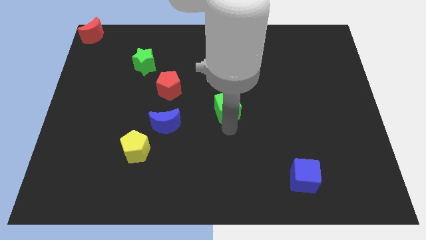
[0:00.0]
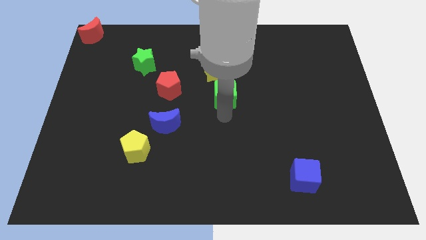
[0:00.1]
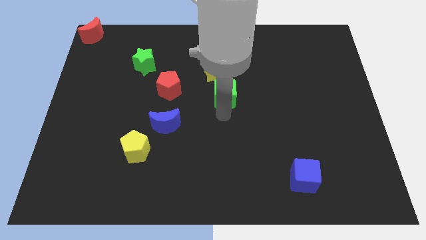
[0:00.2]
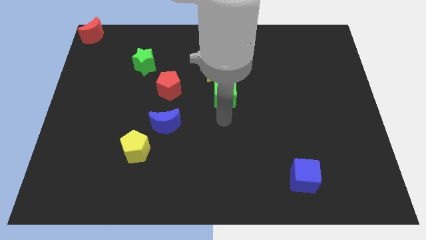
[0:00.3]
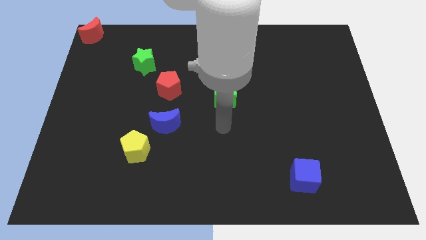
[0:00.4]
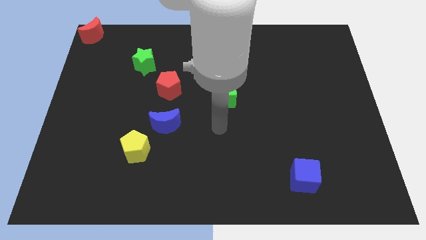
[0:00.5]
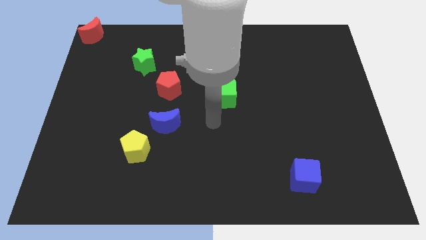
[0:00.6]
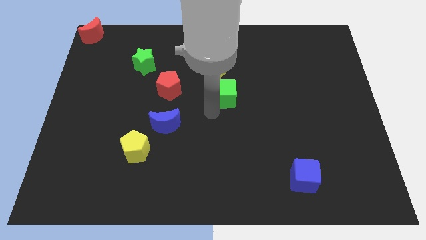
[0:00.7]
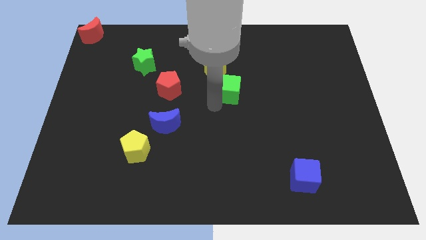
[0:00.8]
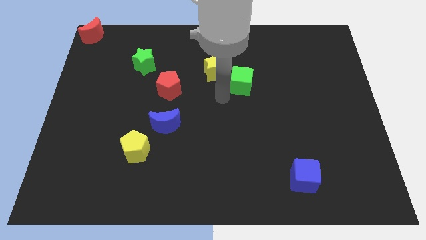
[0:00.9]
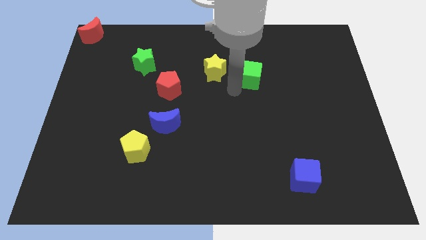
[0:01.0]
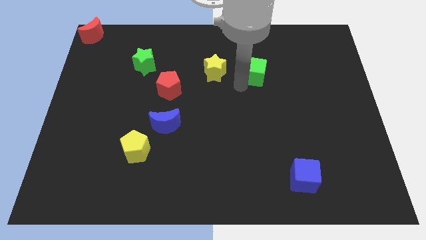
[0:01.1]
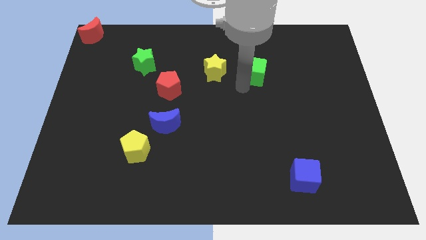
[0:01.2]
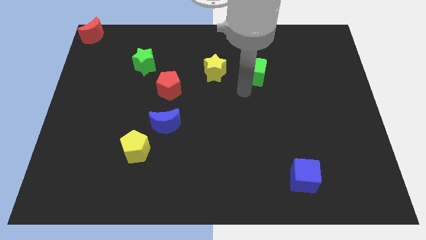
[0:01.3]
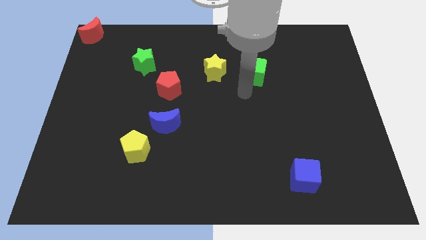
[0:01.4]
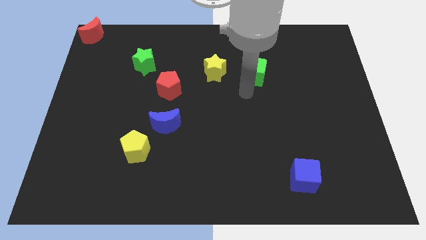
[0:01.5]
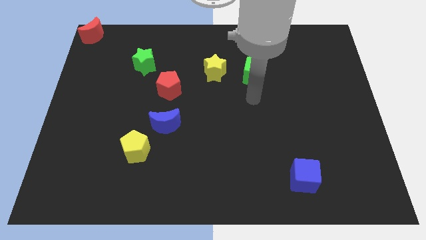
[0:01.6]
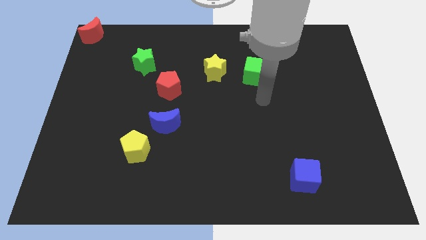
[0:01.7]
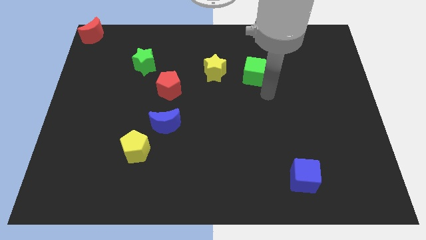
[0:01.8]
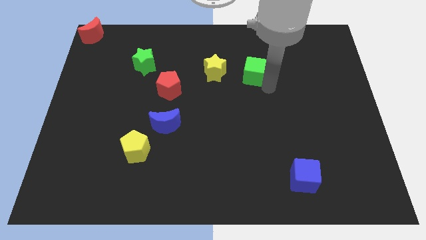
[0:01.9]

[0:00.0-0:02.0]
place the green cube to the right of the yellow star

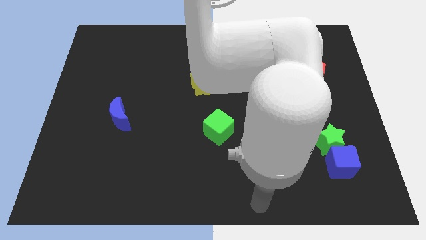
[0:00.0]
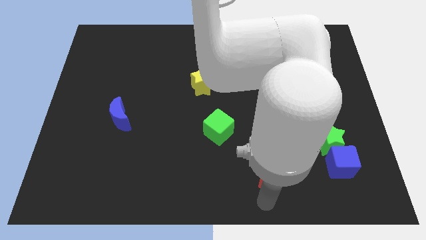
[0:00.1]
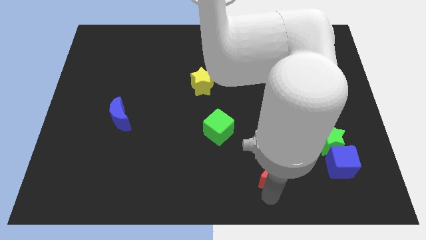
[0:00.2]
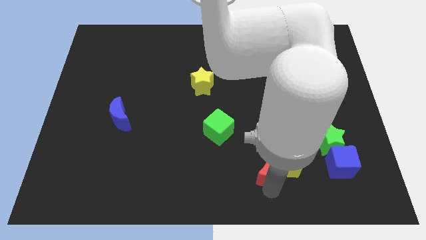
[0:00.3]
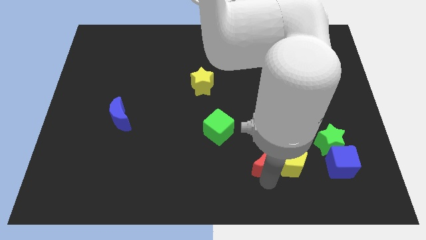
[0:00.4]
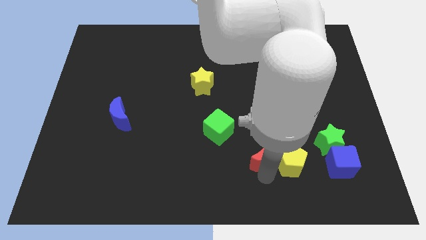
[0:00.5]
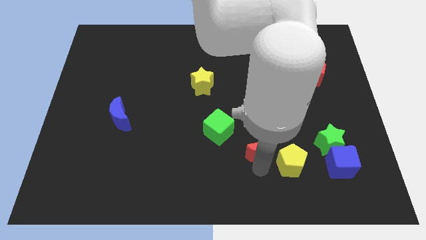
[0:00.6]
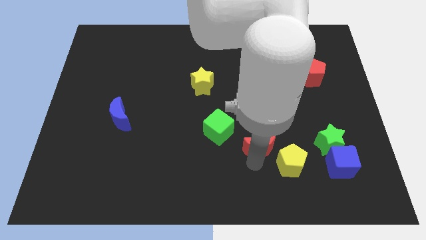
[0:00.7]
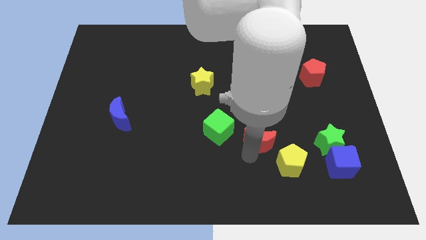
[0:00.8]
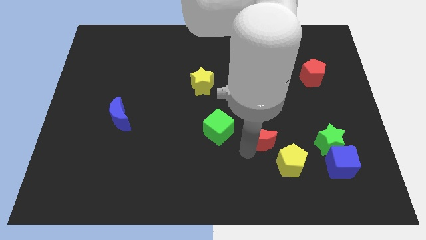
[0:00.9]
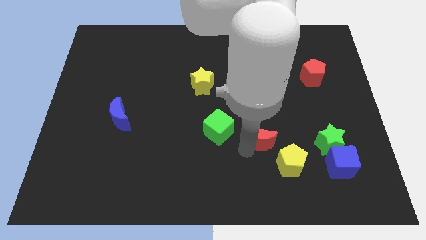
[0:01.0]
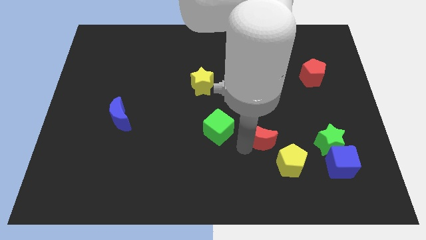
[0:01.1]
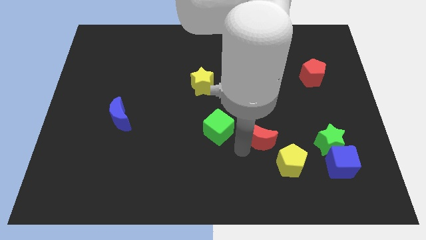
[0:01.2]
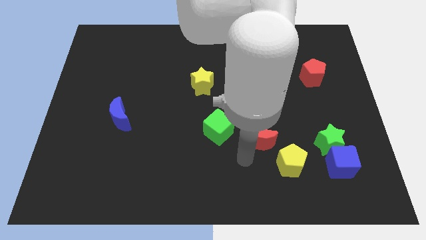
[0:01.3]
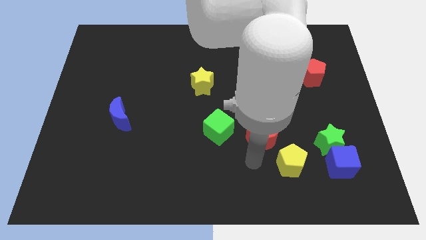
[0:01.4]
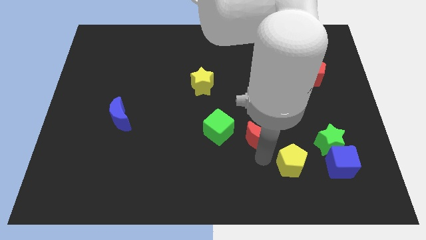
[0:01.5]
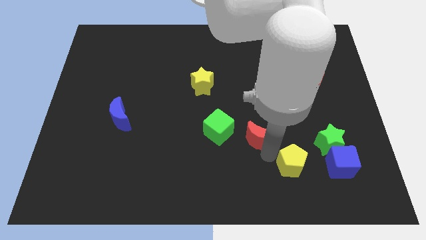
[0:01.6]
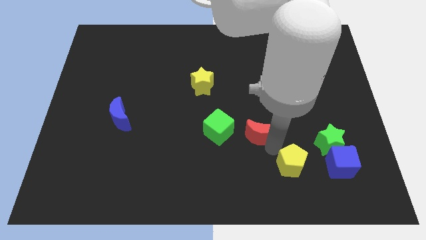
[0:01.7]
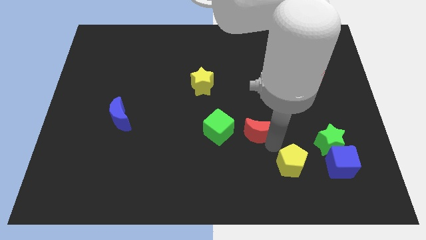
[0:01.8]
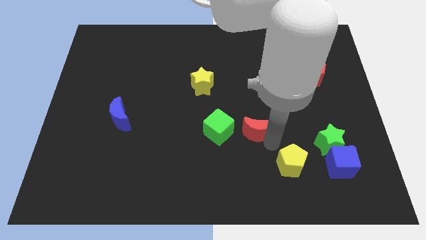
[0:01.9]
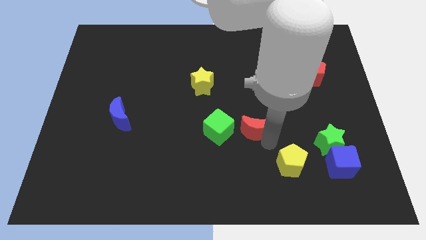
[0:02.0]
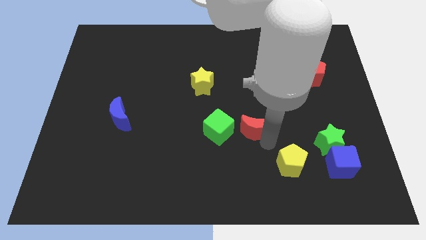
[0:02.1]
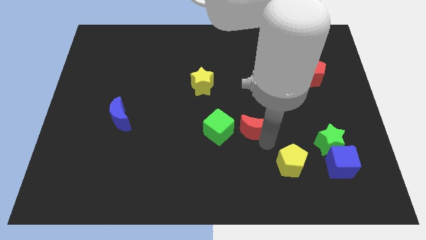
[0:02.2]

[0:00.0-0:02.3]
separate the red moon from the yellow pentagon

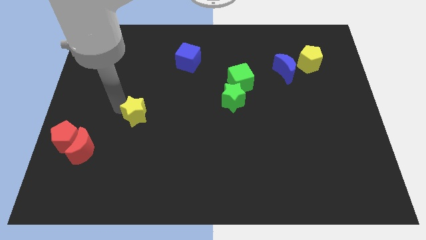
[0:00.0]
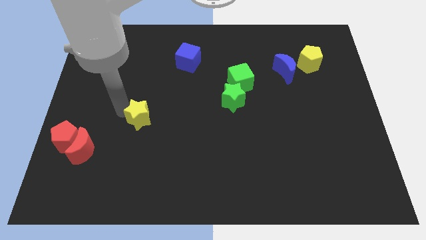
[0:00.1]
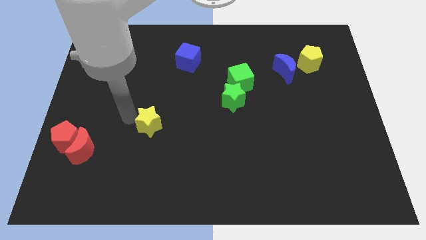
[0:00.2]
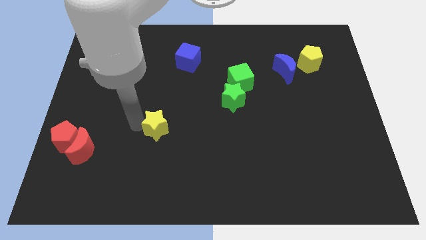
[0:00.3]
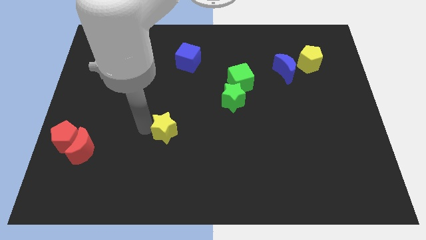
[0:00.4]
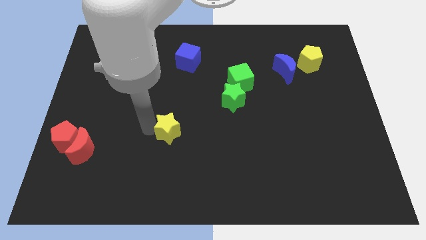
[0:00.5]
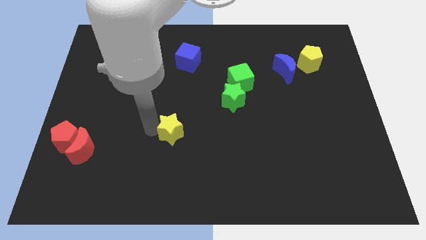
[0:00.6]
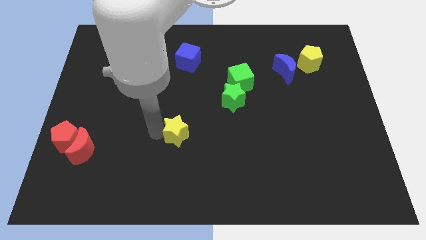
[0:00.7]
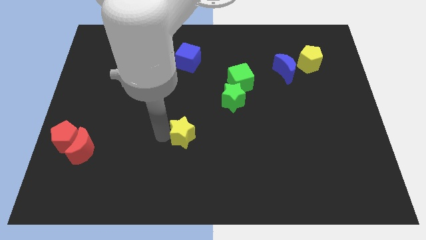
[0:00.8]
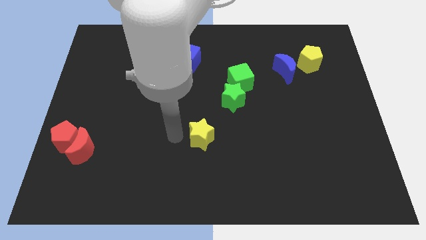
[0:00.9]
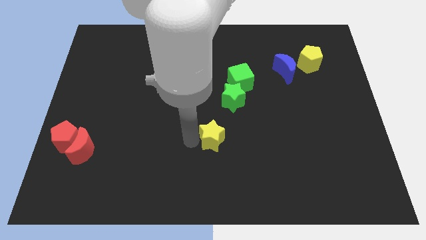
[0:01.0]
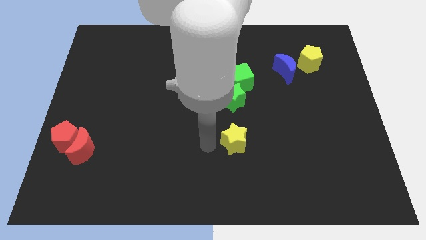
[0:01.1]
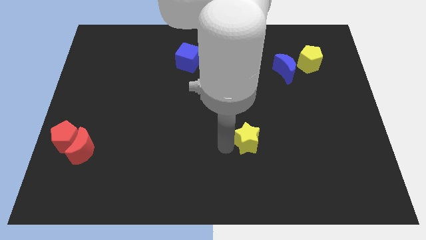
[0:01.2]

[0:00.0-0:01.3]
push the yellow star to the right side of the board

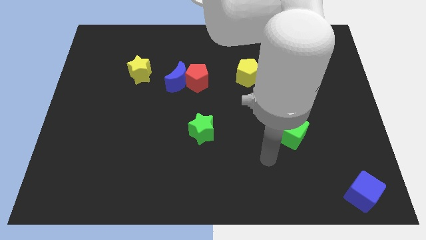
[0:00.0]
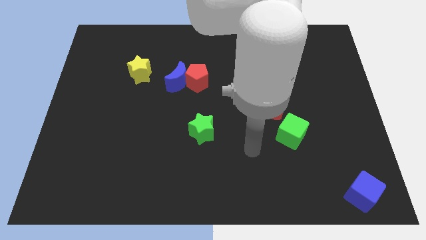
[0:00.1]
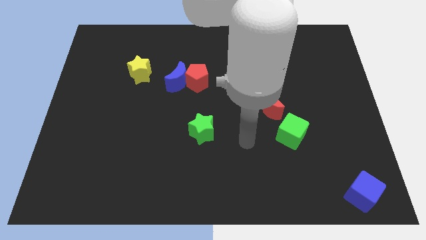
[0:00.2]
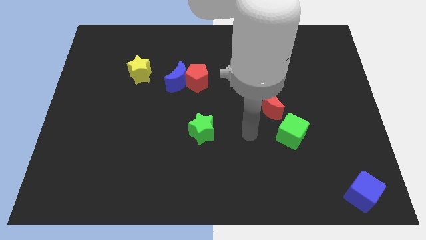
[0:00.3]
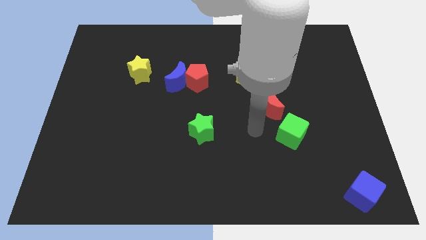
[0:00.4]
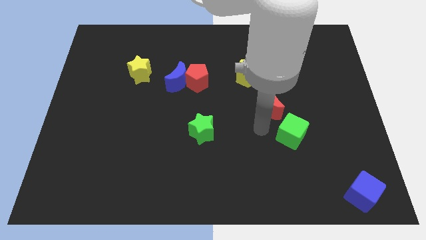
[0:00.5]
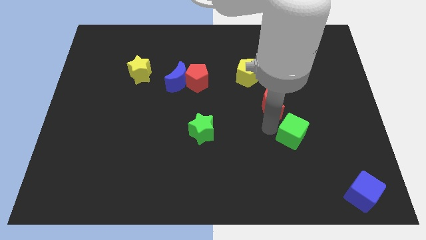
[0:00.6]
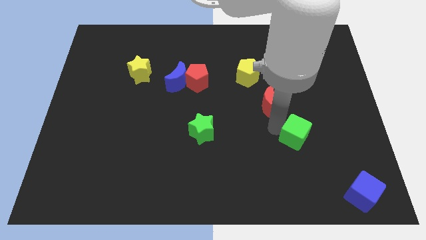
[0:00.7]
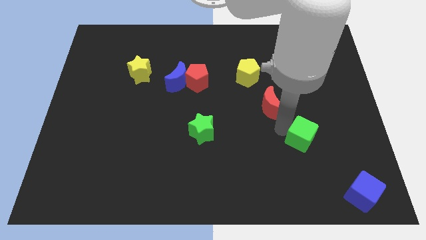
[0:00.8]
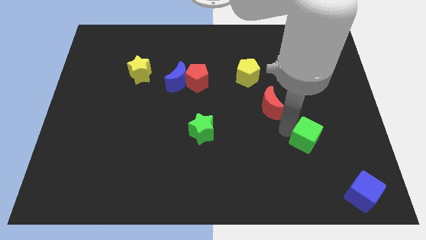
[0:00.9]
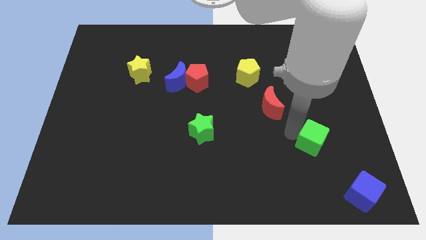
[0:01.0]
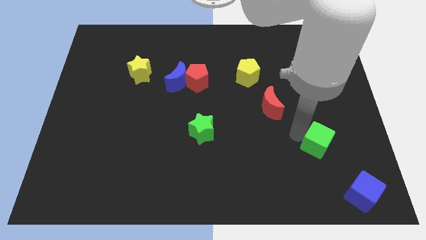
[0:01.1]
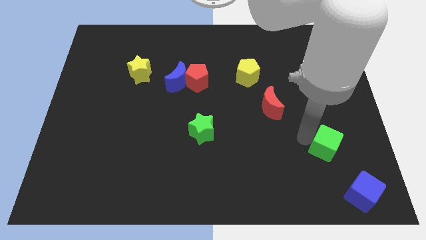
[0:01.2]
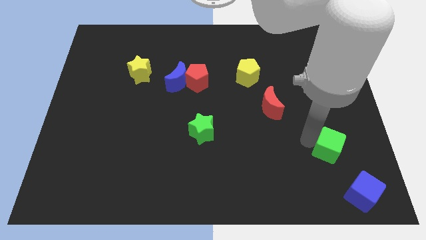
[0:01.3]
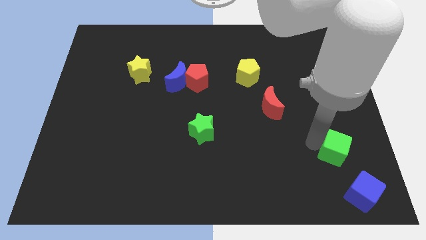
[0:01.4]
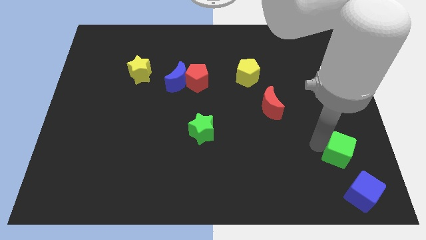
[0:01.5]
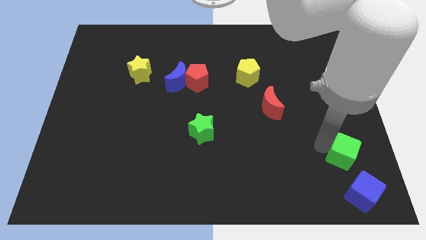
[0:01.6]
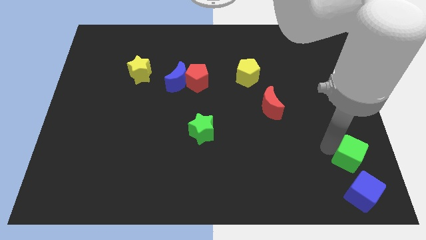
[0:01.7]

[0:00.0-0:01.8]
place the green cube above the blue cube

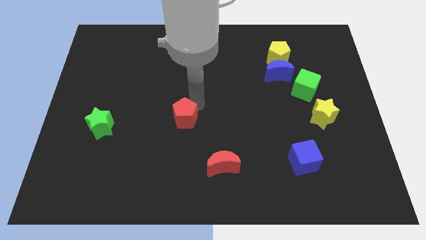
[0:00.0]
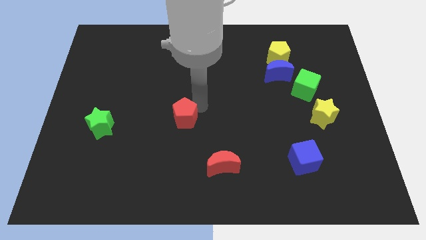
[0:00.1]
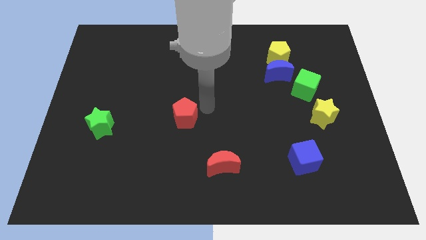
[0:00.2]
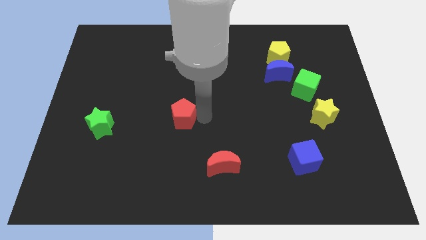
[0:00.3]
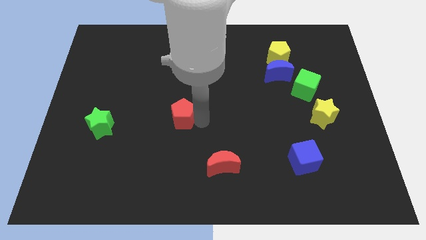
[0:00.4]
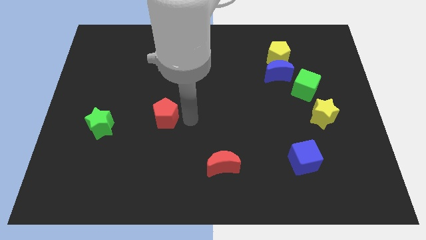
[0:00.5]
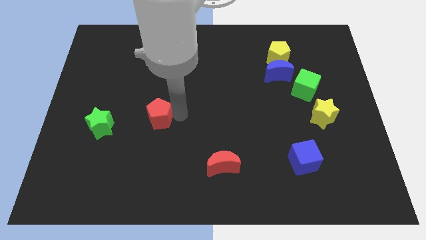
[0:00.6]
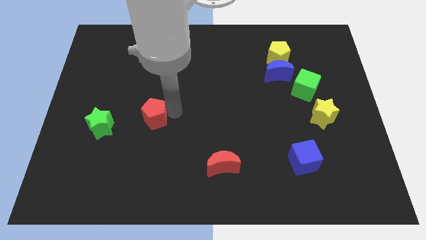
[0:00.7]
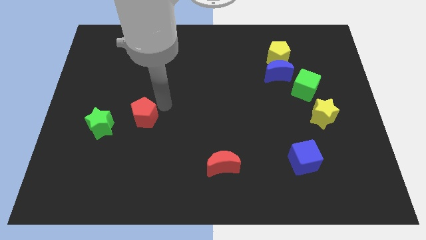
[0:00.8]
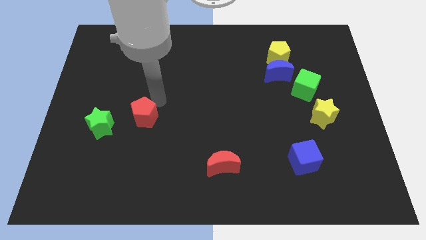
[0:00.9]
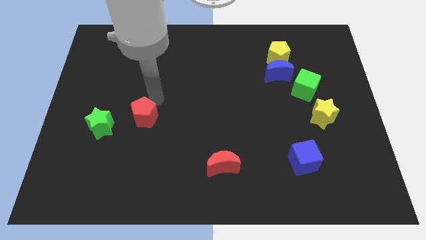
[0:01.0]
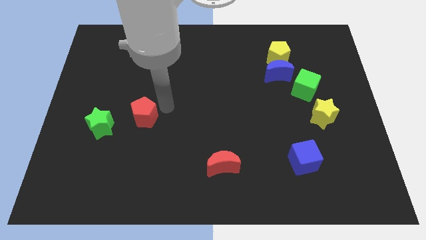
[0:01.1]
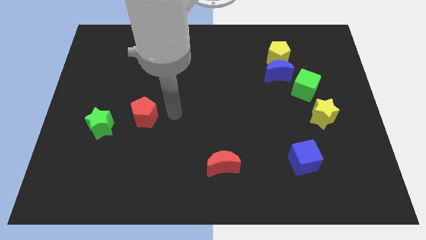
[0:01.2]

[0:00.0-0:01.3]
move the red pentagon towards the green star

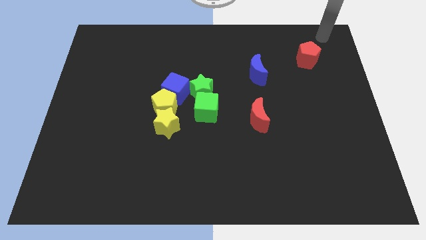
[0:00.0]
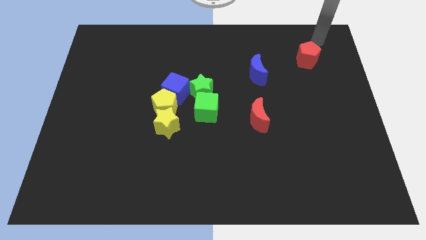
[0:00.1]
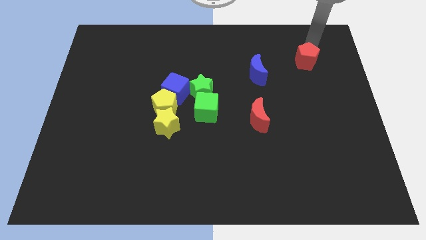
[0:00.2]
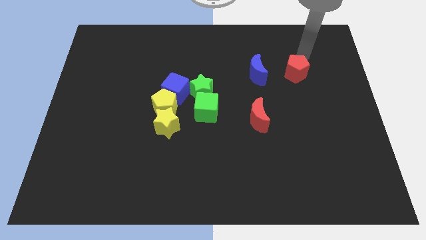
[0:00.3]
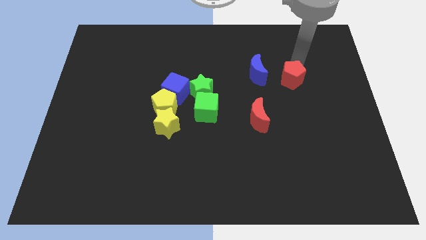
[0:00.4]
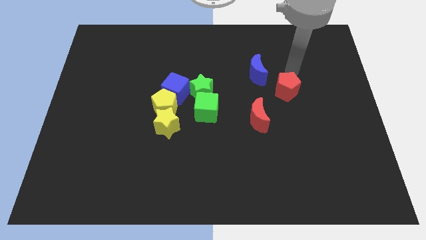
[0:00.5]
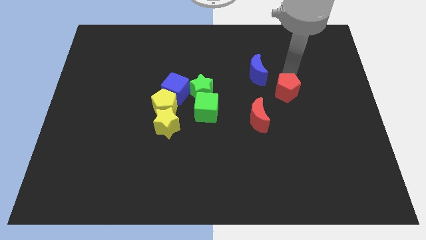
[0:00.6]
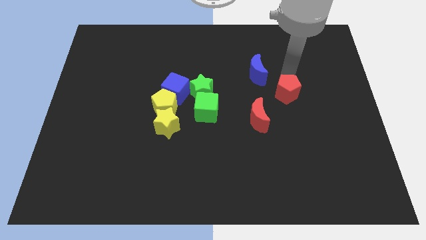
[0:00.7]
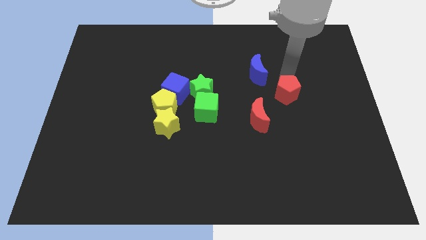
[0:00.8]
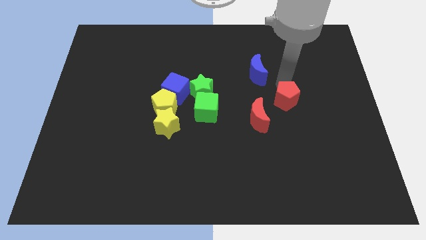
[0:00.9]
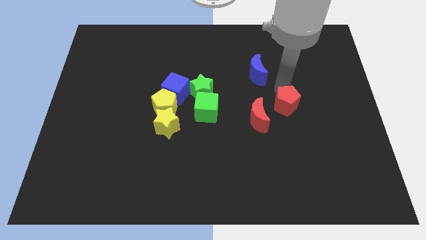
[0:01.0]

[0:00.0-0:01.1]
slide red pentagon towards red moon
